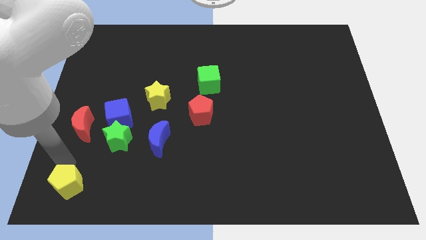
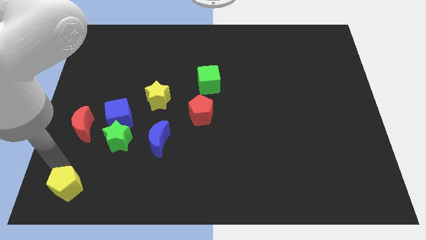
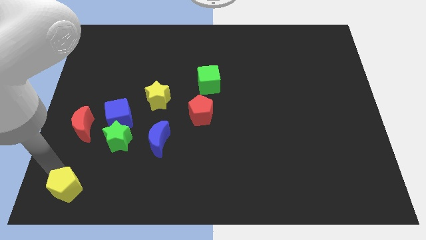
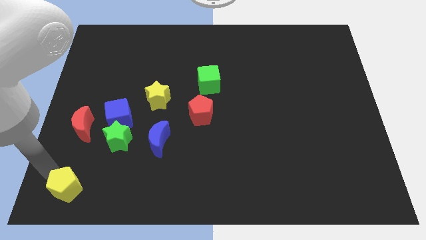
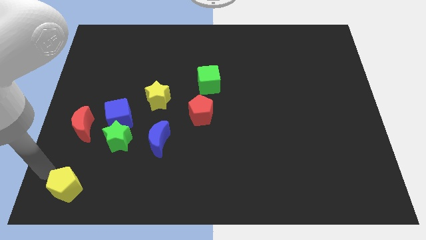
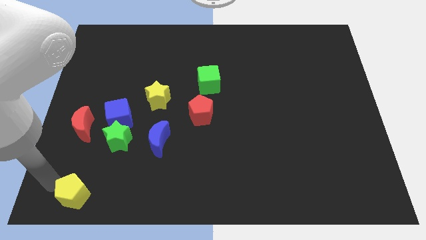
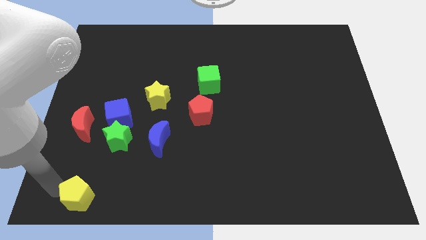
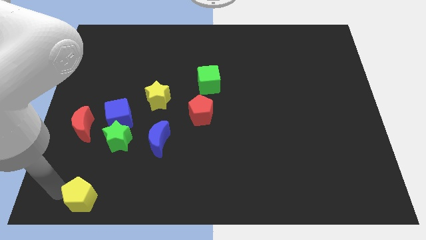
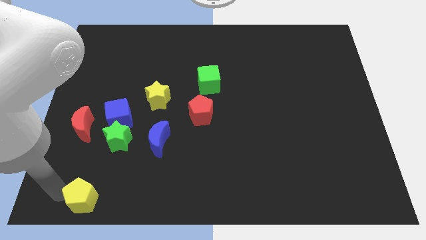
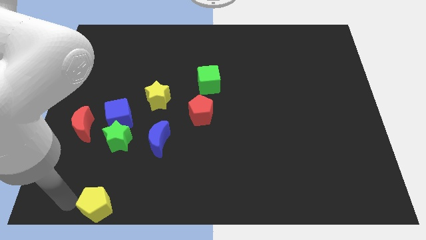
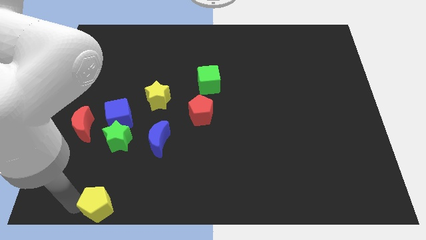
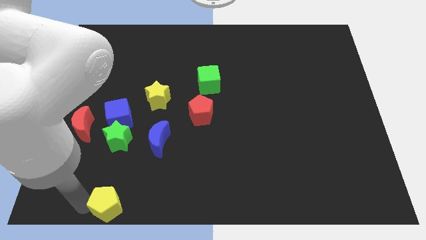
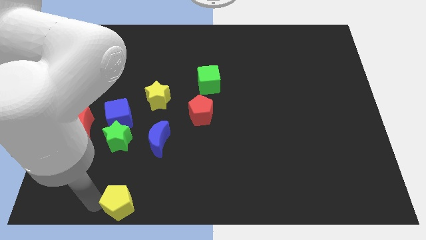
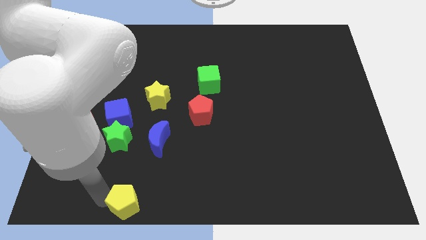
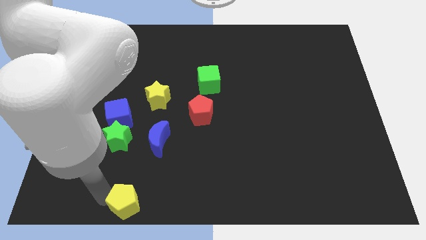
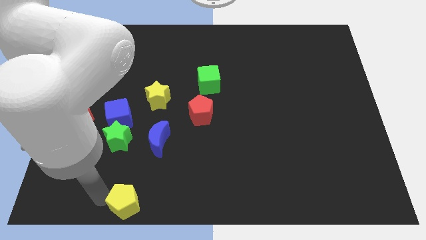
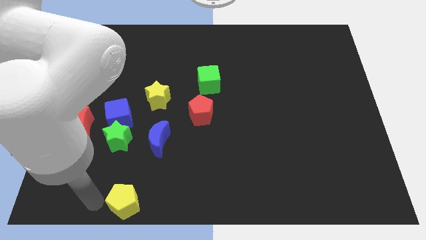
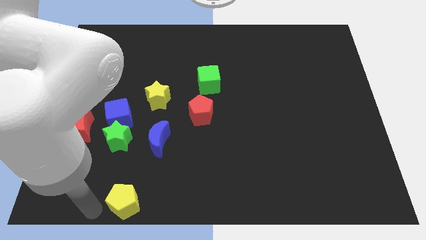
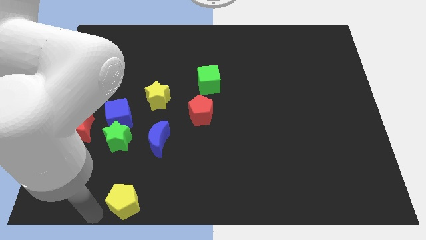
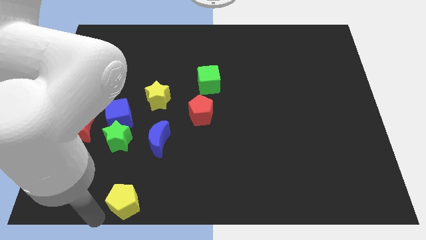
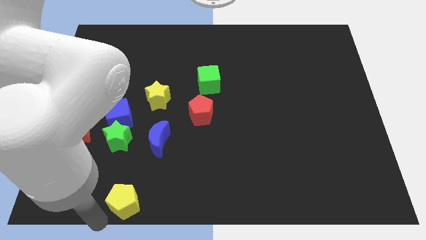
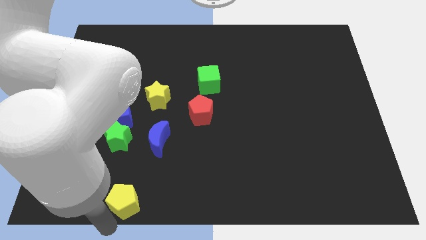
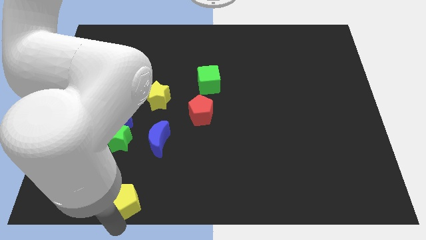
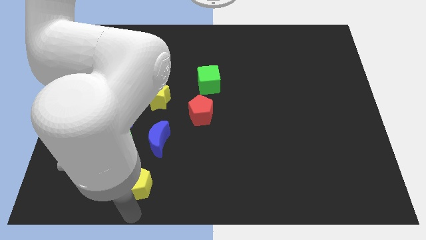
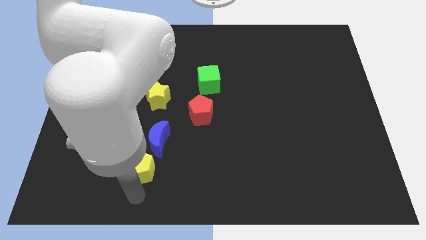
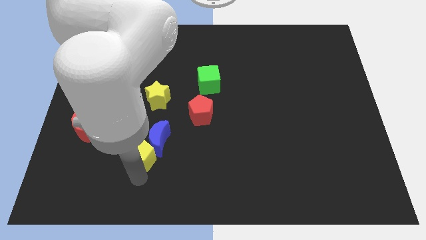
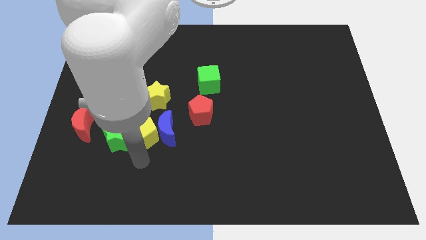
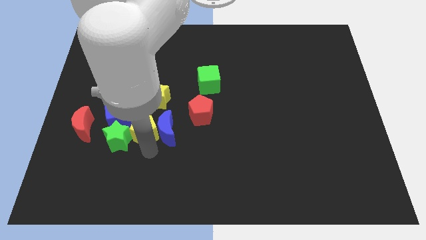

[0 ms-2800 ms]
place the yellow pentagon in between the green star and the blue moon

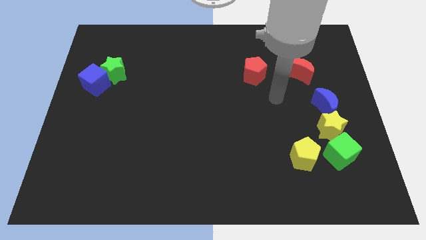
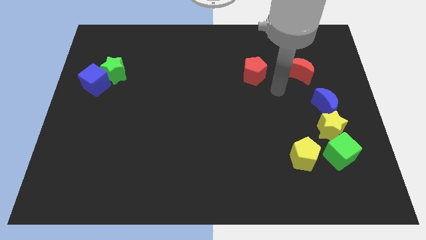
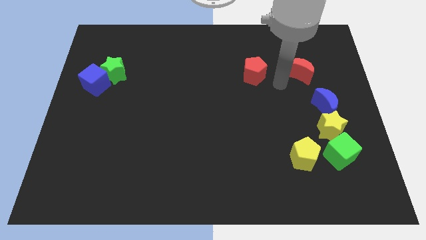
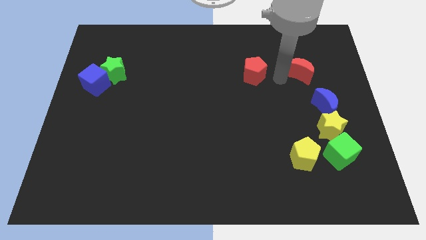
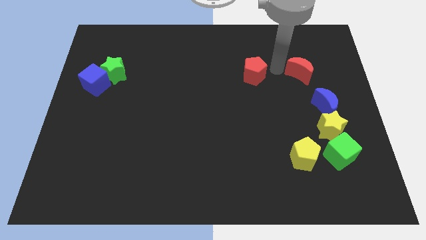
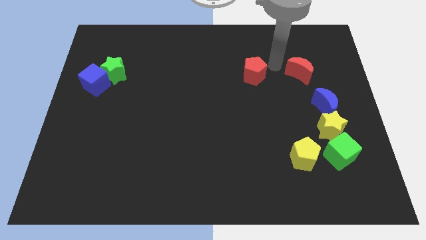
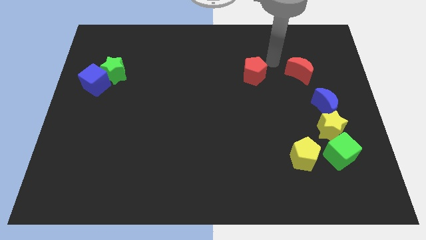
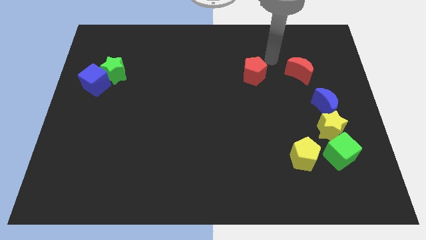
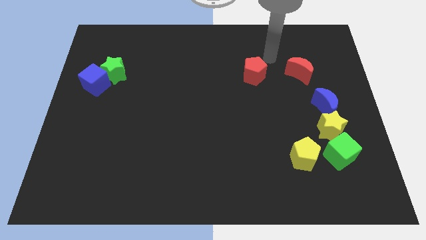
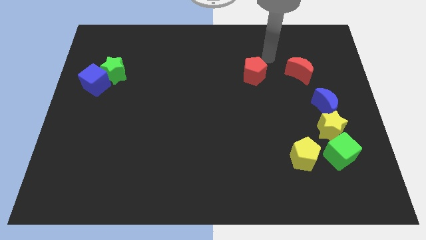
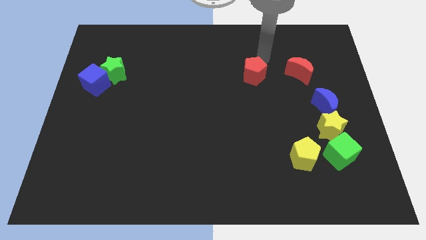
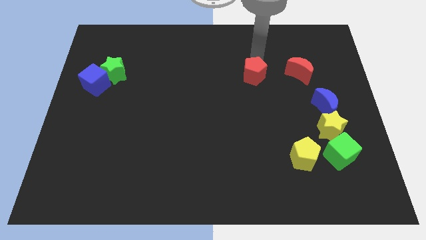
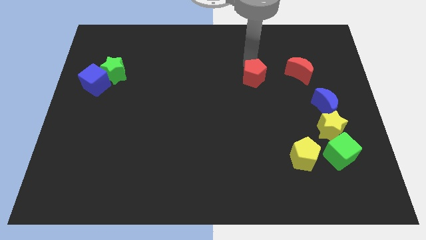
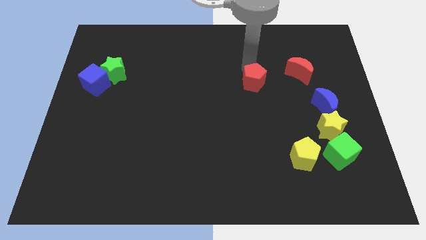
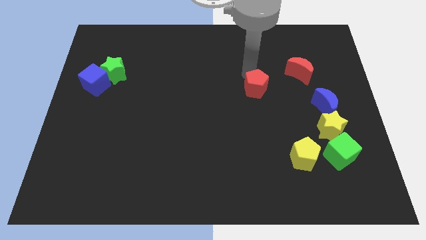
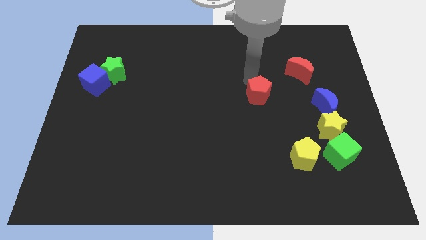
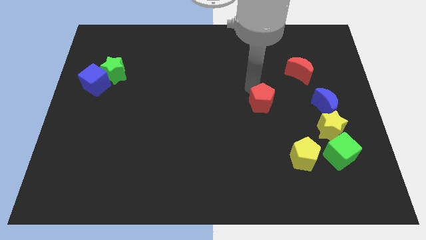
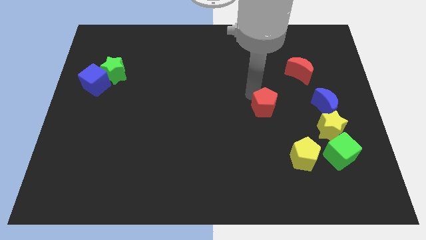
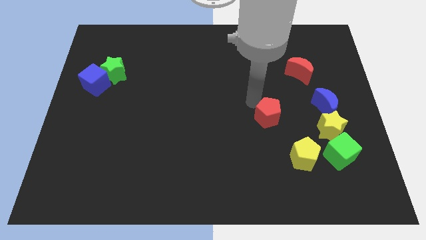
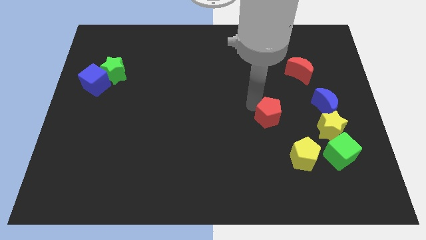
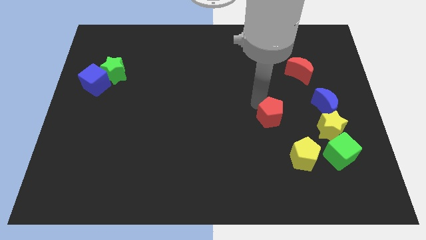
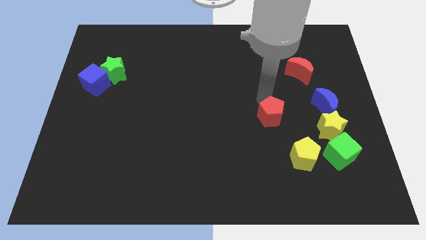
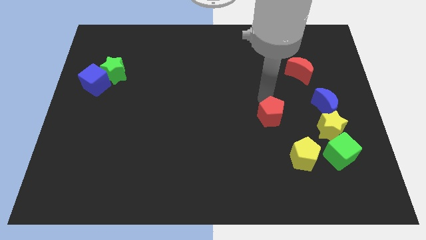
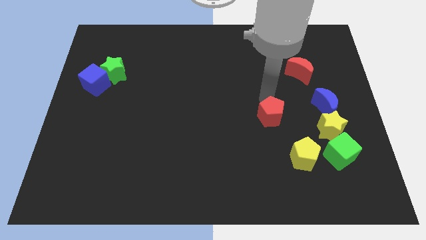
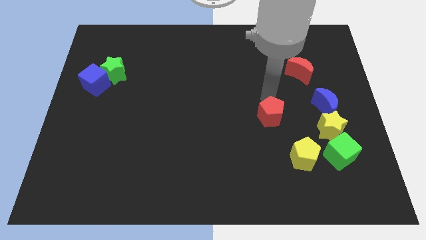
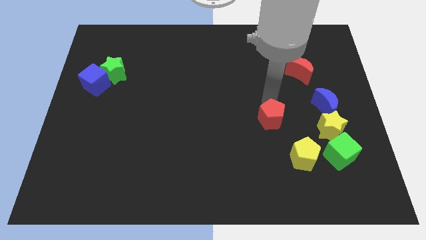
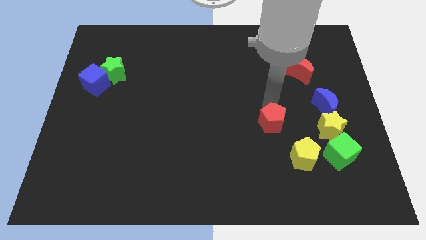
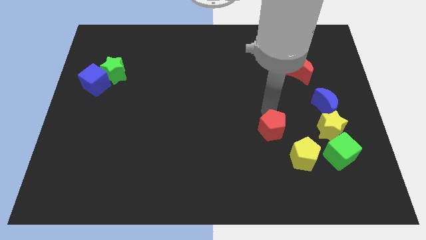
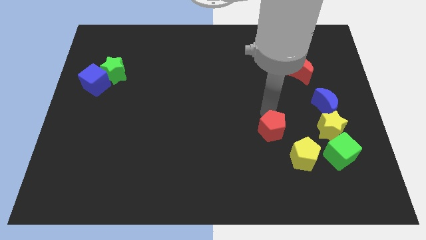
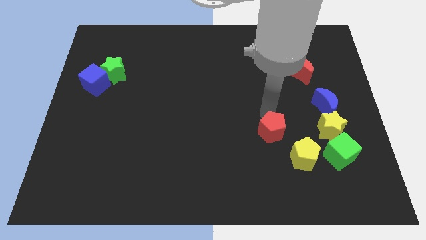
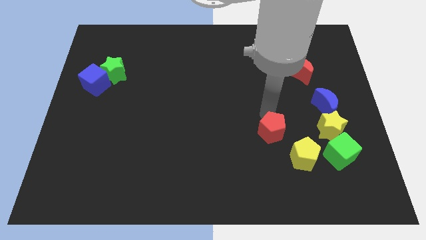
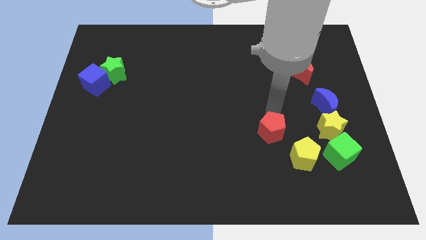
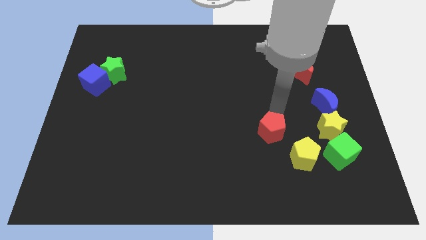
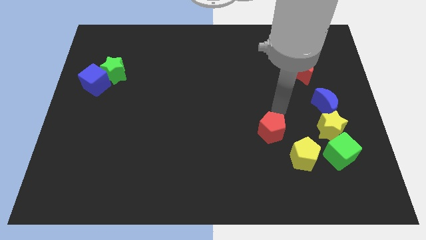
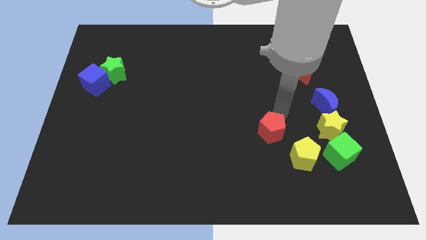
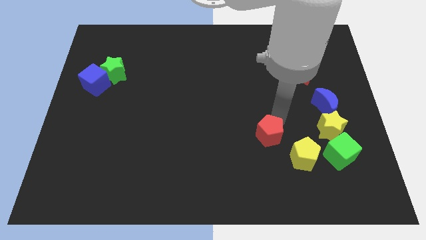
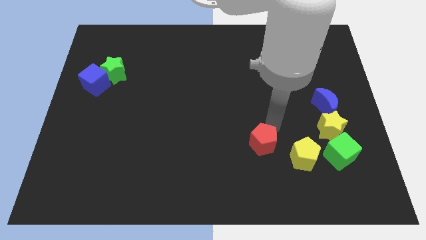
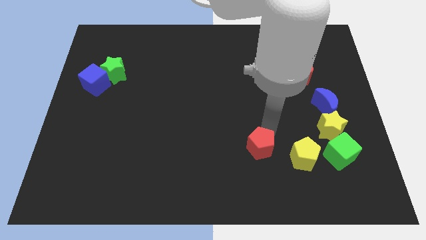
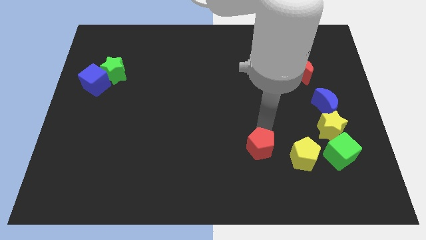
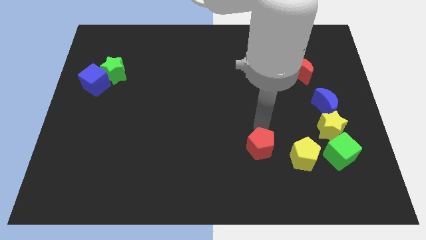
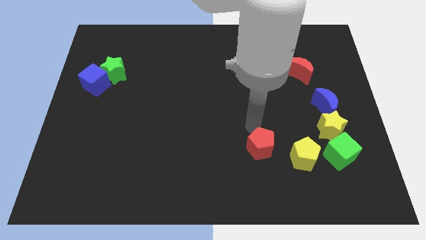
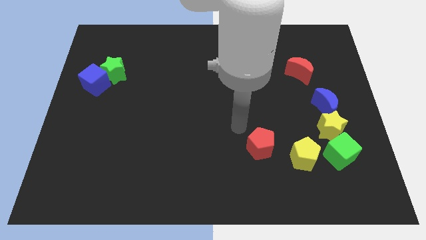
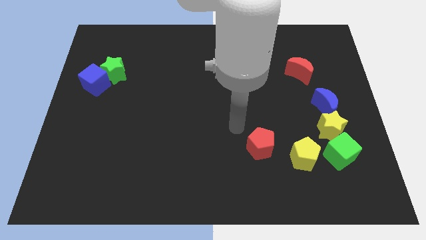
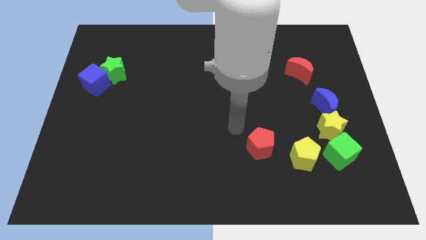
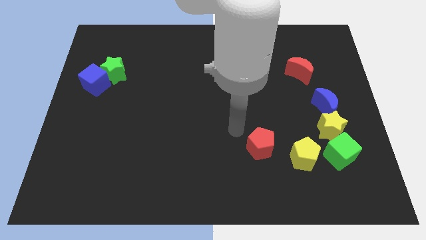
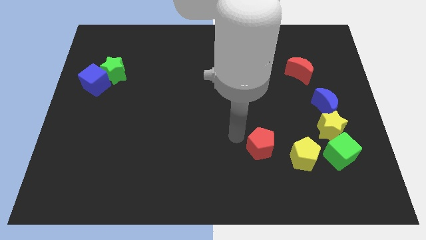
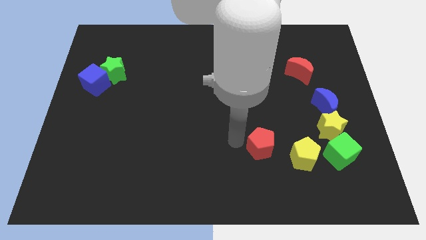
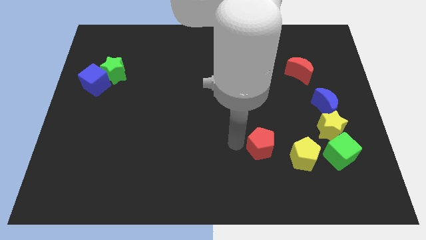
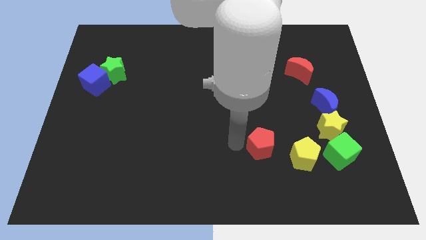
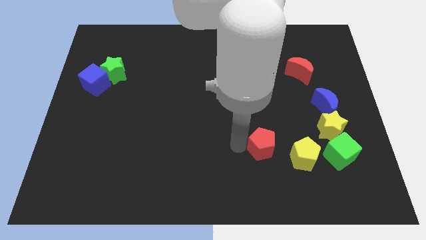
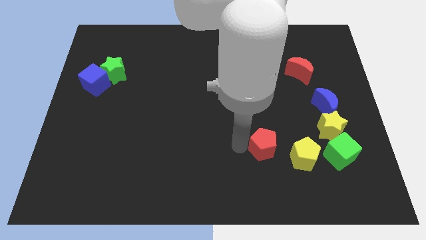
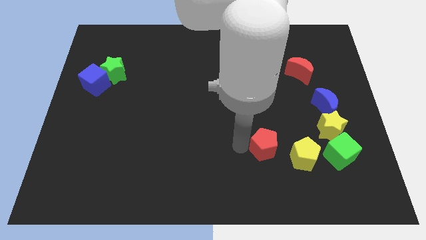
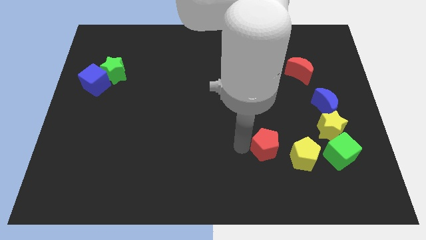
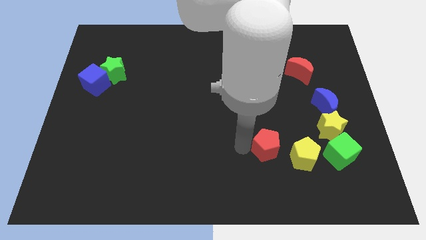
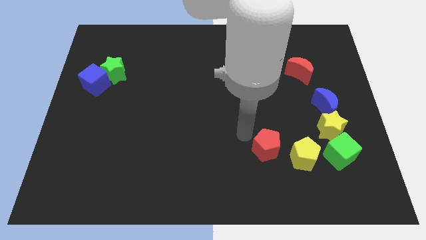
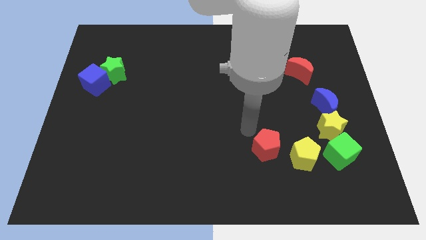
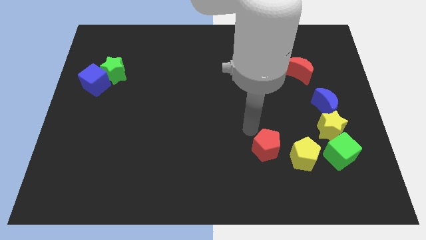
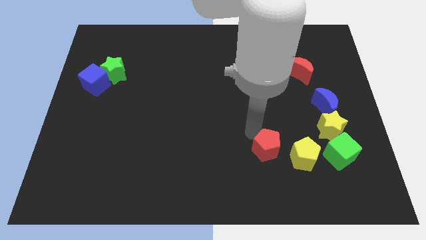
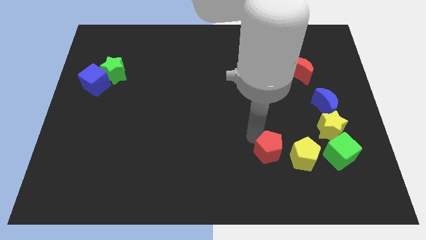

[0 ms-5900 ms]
move the red pentagon left beside the yellow pentagon

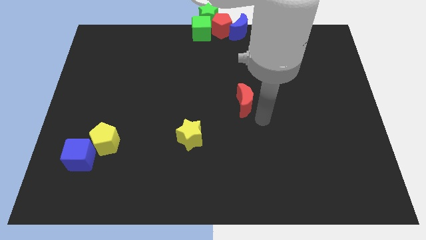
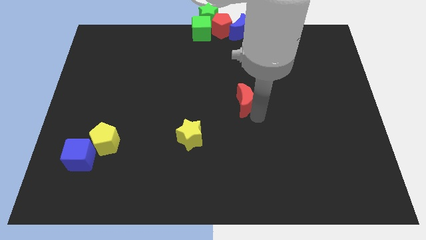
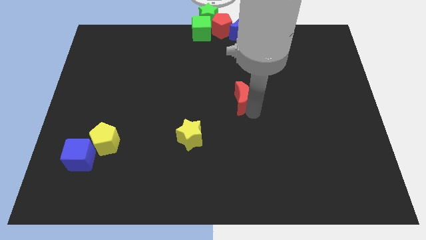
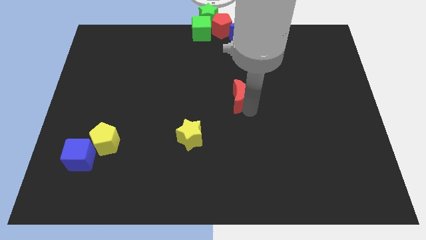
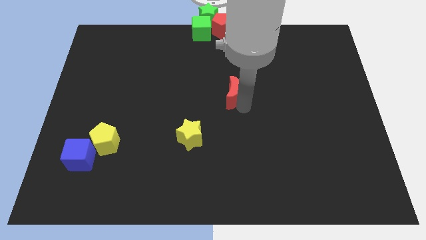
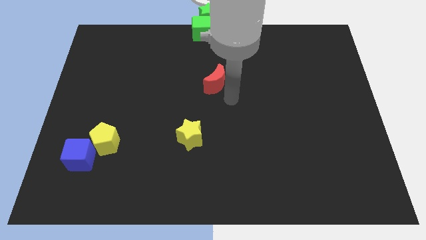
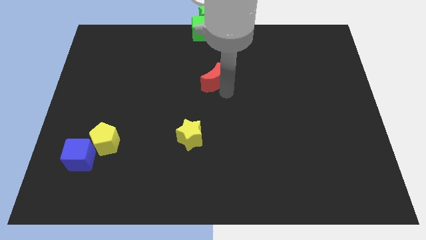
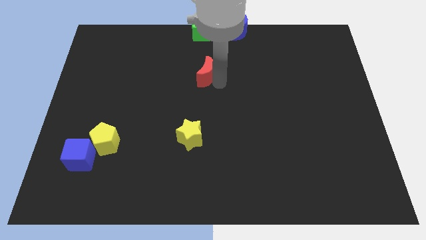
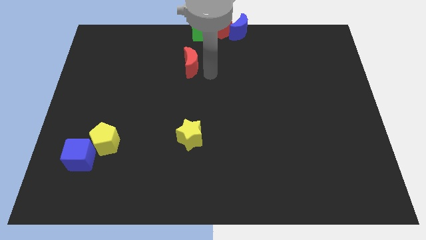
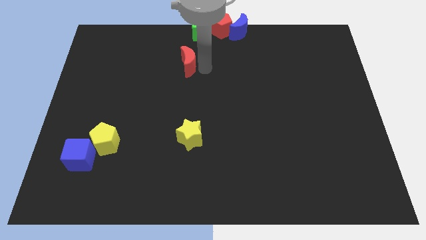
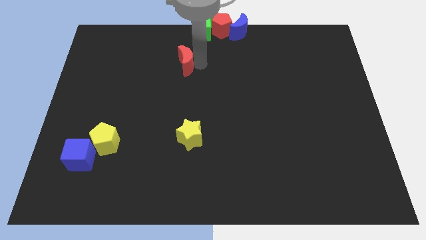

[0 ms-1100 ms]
place the red crescent above the yellow star
